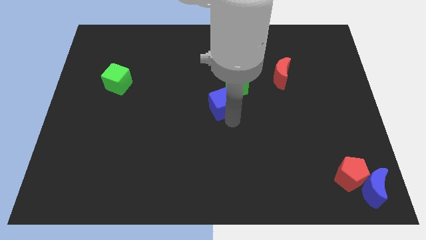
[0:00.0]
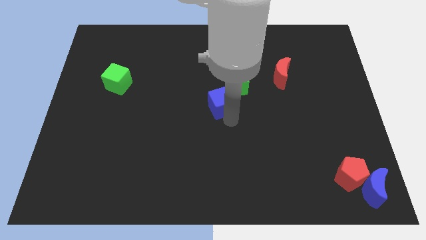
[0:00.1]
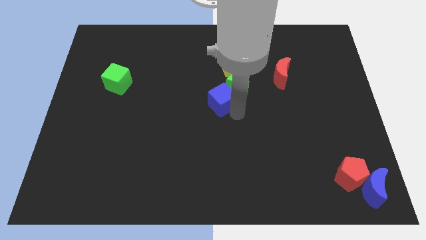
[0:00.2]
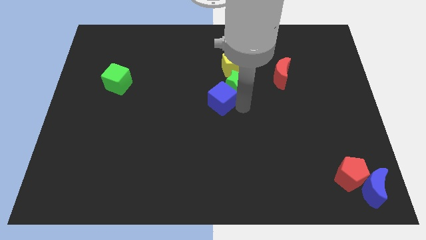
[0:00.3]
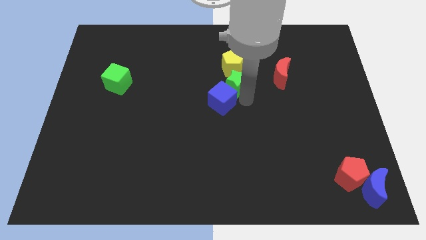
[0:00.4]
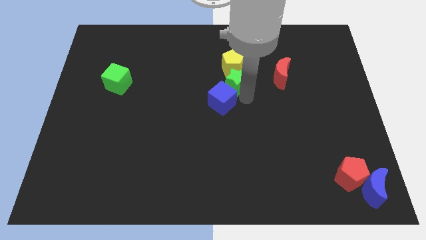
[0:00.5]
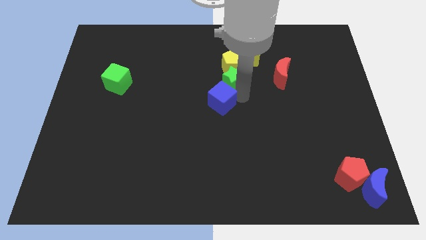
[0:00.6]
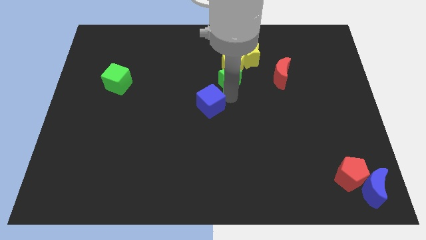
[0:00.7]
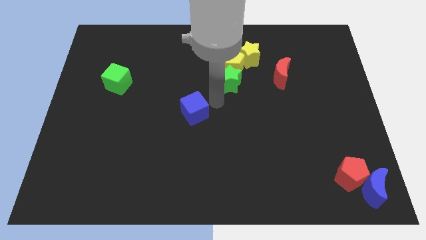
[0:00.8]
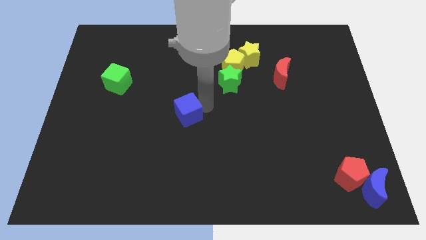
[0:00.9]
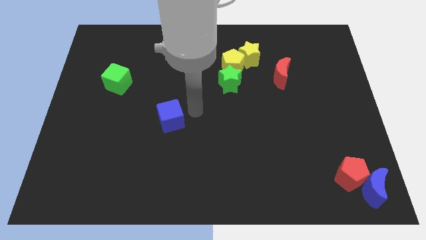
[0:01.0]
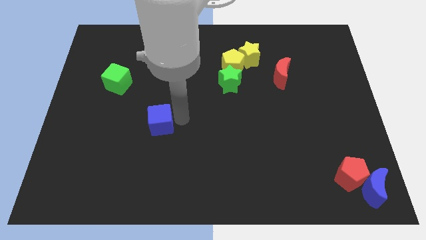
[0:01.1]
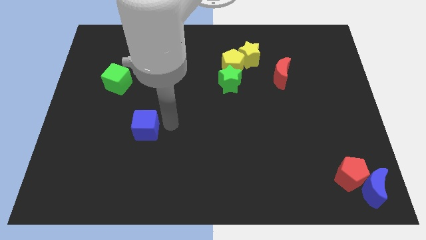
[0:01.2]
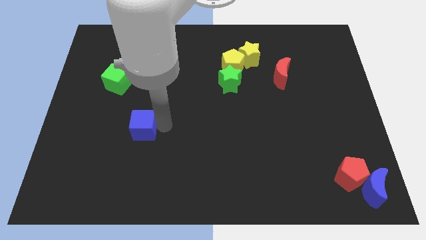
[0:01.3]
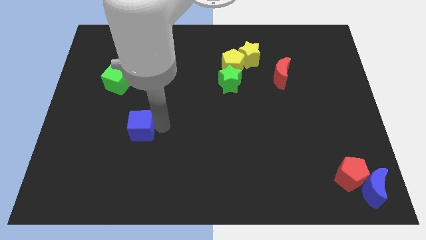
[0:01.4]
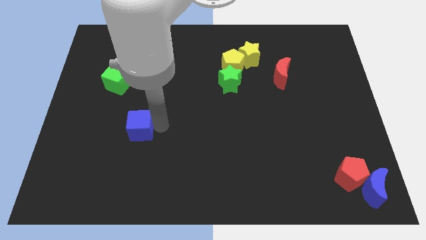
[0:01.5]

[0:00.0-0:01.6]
slide the blue cube to the left

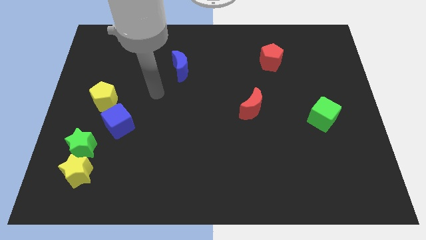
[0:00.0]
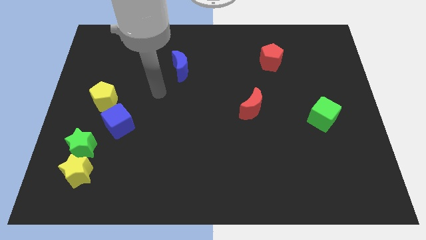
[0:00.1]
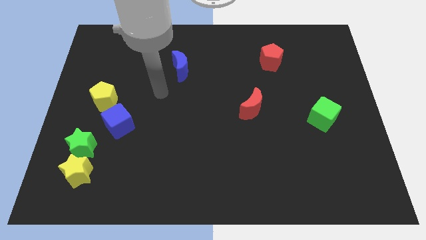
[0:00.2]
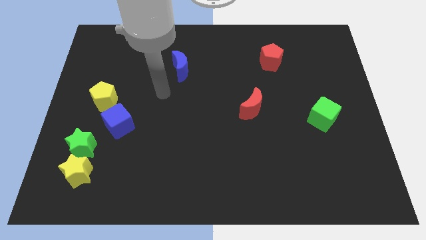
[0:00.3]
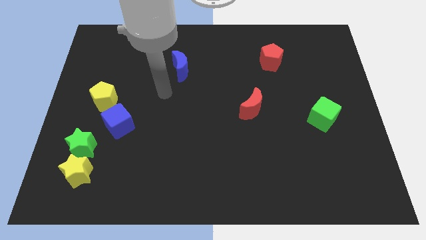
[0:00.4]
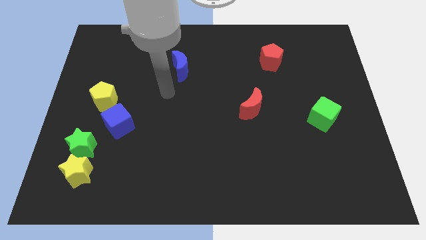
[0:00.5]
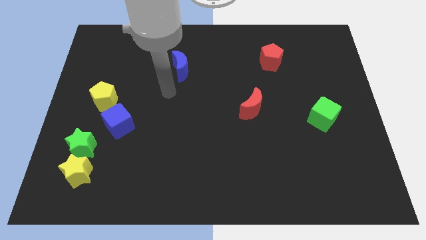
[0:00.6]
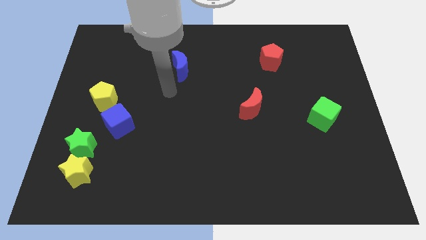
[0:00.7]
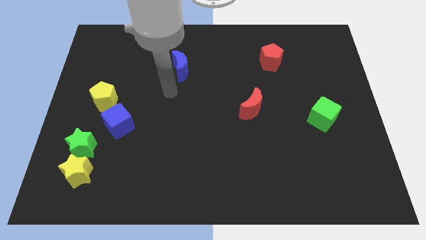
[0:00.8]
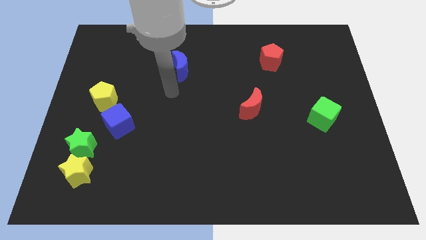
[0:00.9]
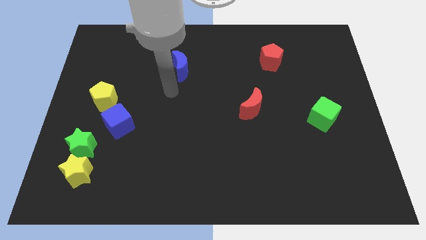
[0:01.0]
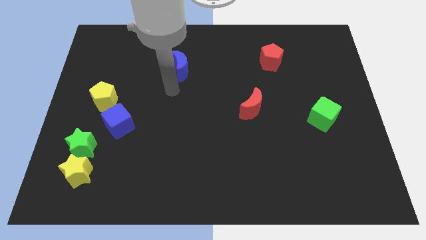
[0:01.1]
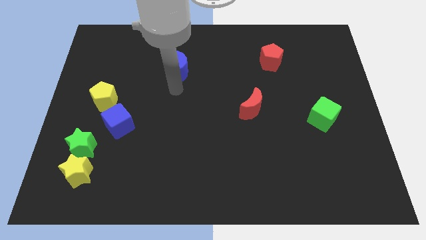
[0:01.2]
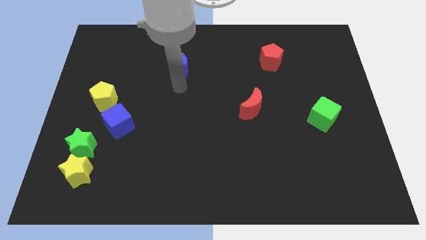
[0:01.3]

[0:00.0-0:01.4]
point your arm at the bottom of the blue crescent

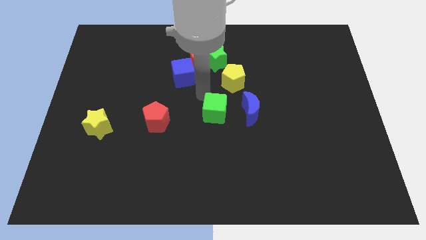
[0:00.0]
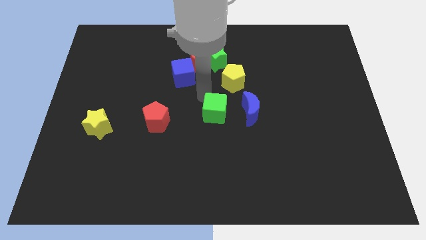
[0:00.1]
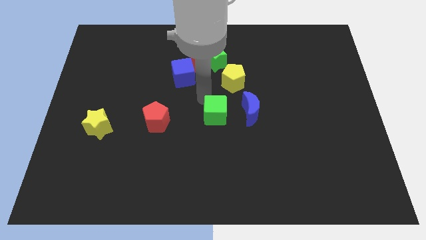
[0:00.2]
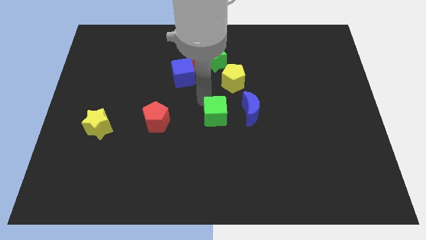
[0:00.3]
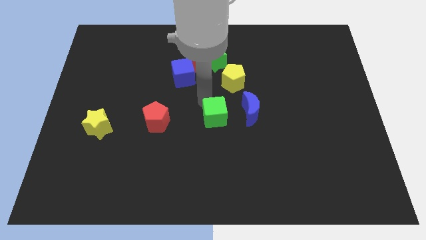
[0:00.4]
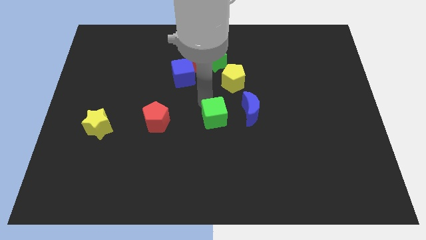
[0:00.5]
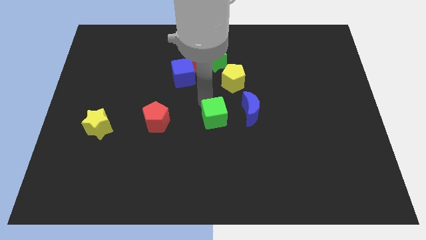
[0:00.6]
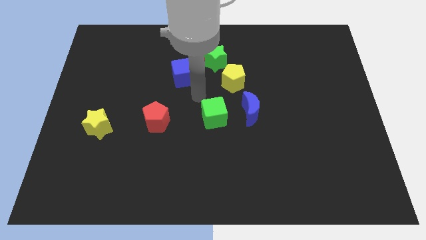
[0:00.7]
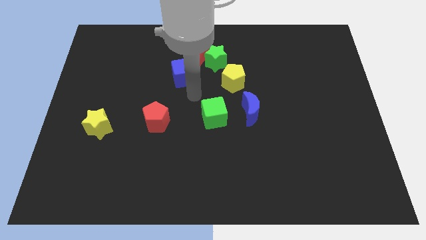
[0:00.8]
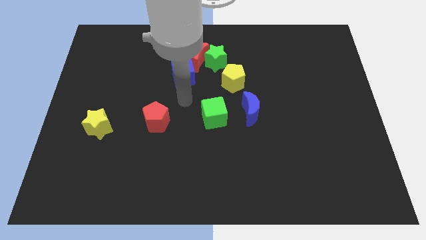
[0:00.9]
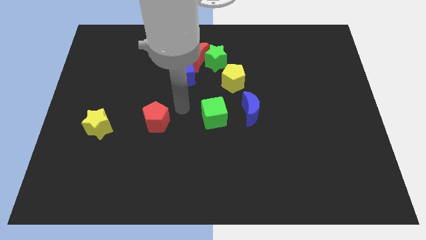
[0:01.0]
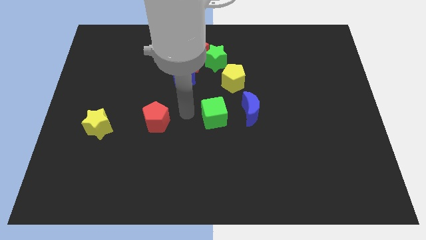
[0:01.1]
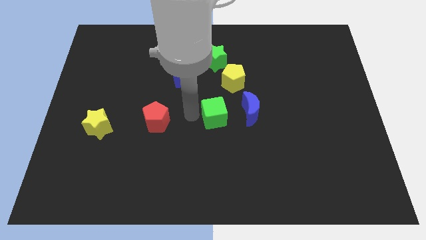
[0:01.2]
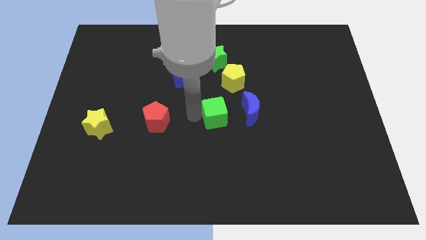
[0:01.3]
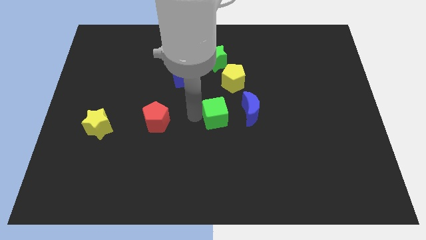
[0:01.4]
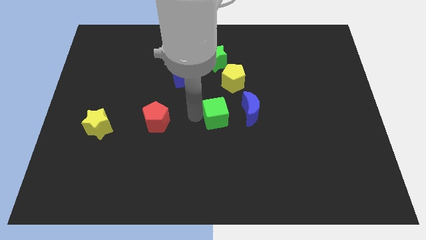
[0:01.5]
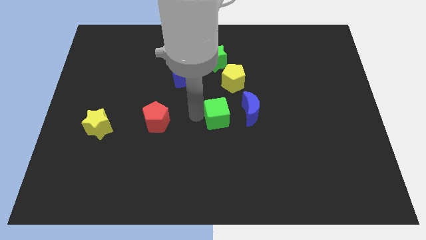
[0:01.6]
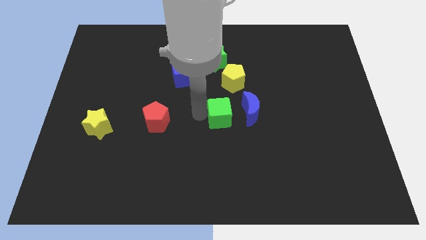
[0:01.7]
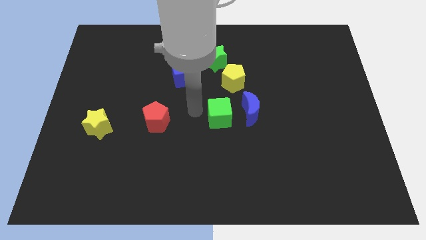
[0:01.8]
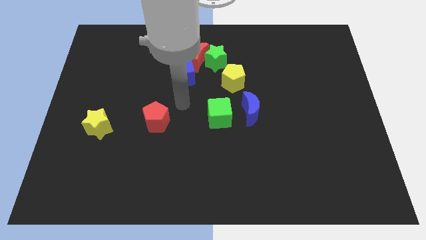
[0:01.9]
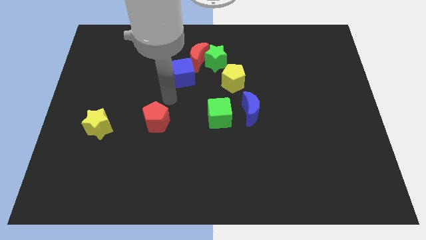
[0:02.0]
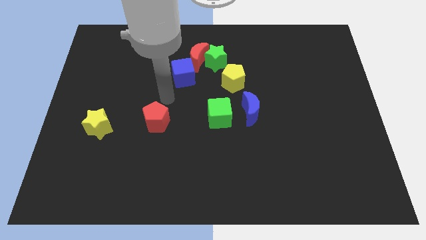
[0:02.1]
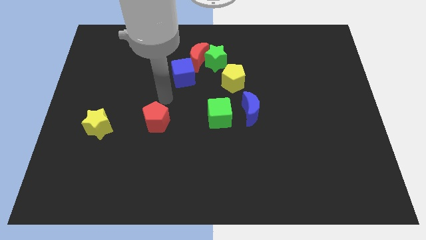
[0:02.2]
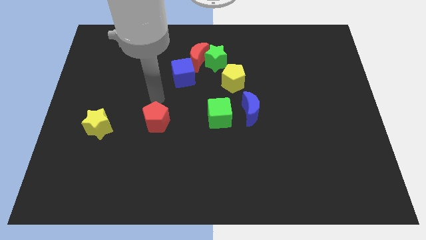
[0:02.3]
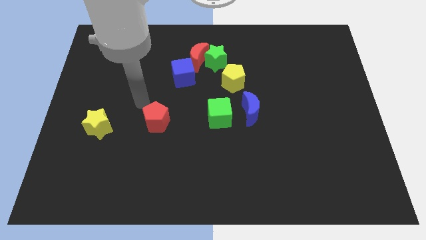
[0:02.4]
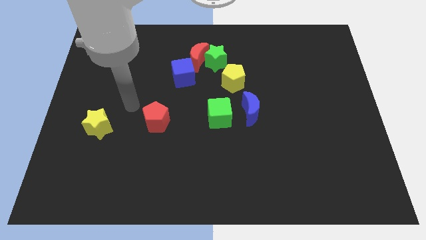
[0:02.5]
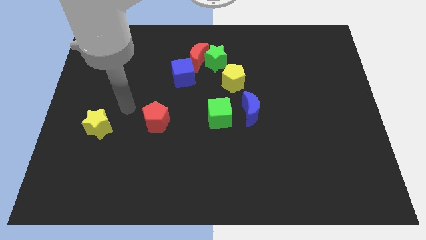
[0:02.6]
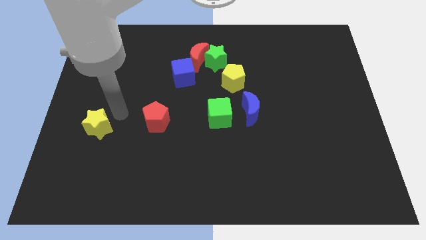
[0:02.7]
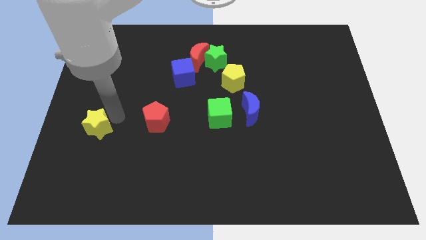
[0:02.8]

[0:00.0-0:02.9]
move green cube slightly towards blue crescent

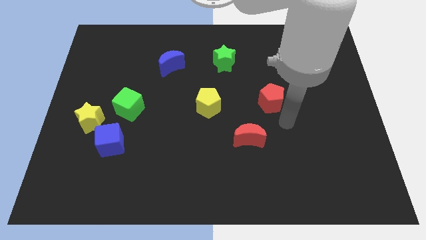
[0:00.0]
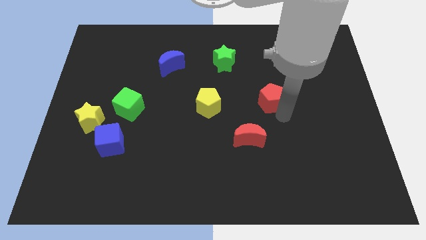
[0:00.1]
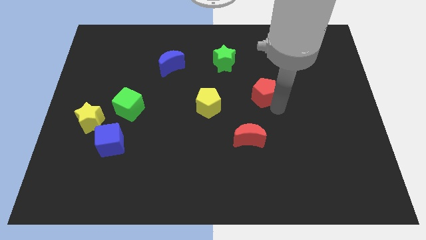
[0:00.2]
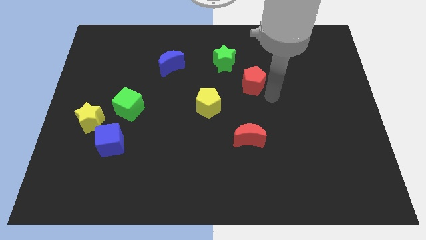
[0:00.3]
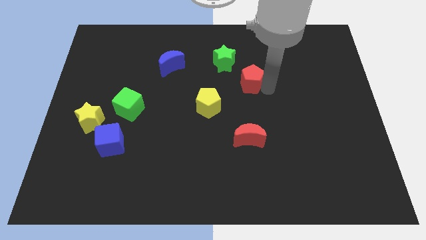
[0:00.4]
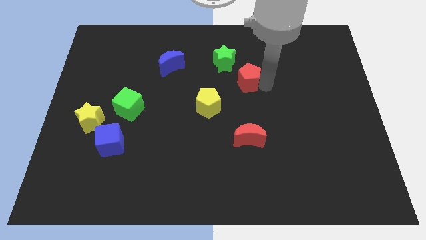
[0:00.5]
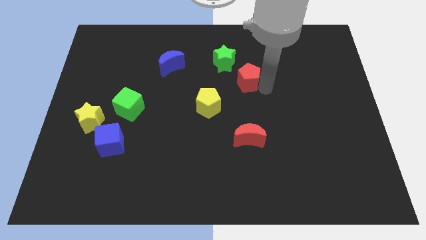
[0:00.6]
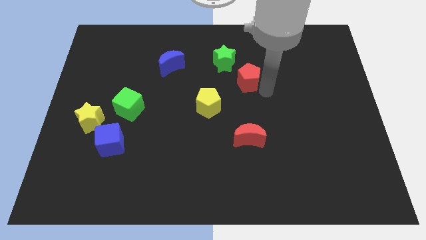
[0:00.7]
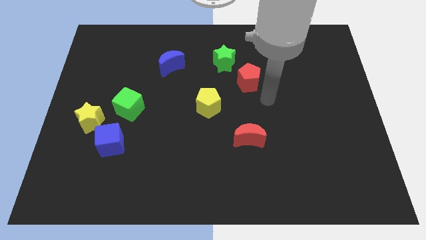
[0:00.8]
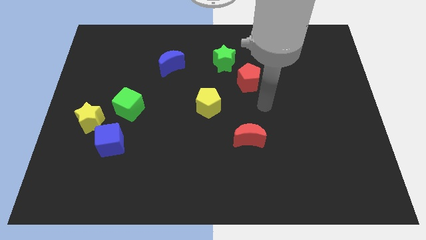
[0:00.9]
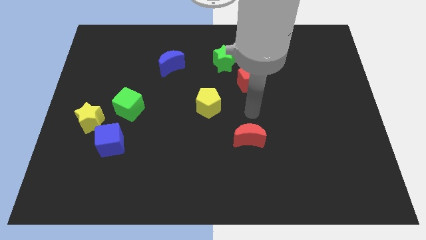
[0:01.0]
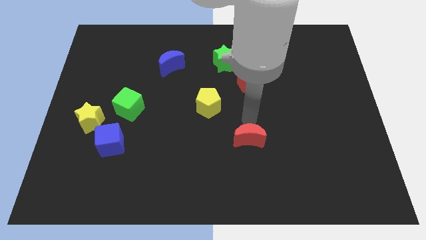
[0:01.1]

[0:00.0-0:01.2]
push the red pentagon to the top

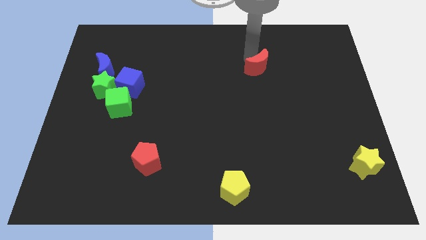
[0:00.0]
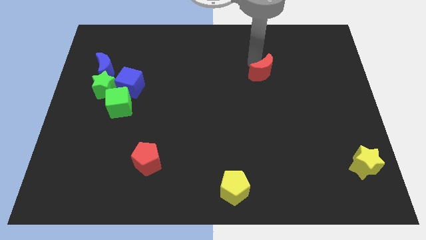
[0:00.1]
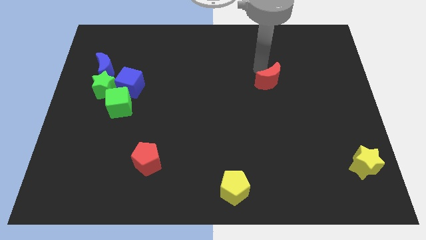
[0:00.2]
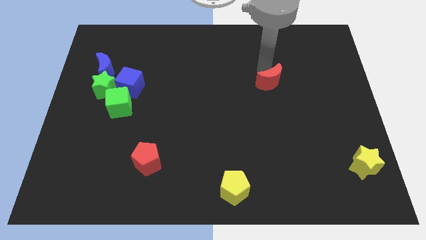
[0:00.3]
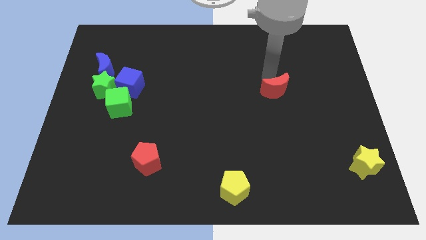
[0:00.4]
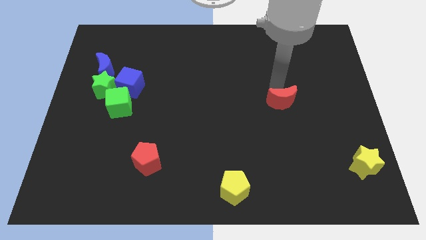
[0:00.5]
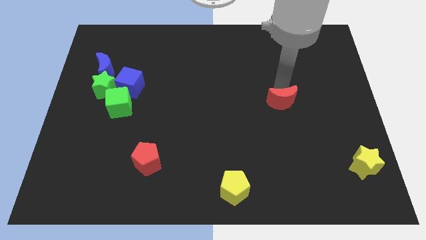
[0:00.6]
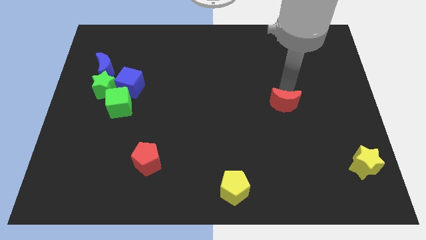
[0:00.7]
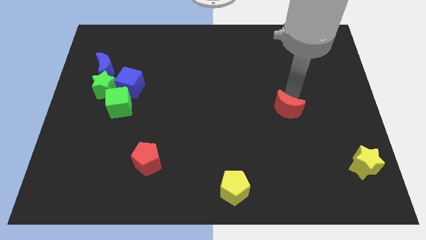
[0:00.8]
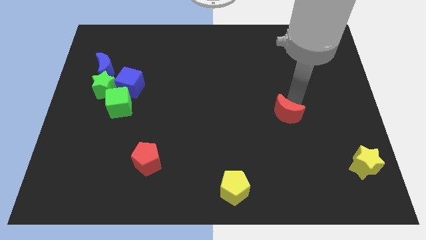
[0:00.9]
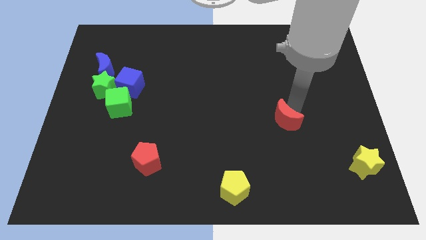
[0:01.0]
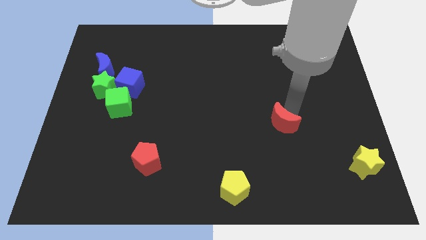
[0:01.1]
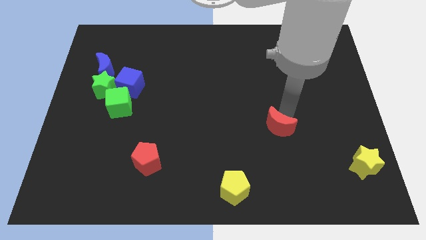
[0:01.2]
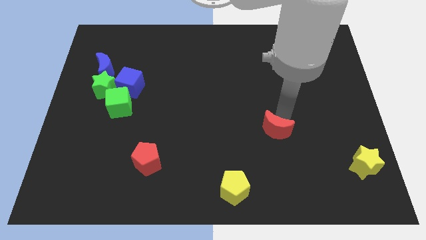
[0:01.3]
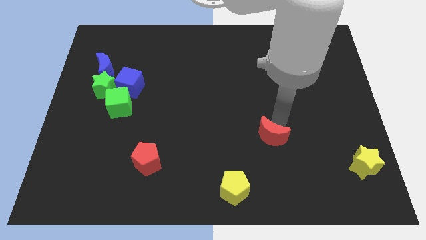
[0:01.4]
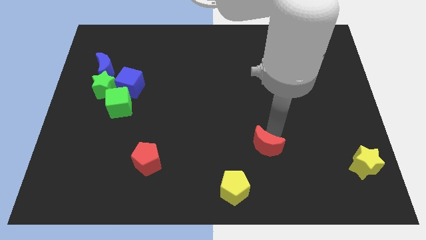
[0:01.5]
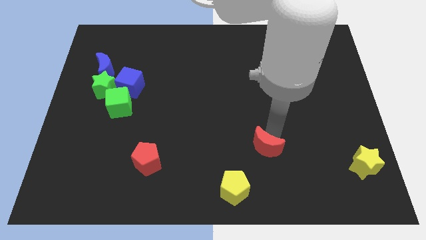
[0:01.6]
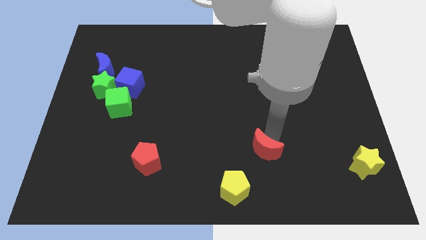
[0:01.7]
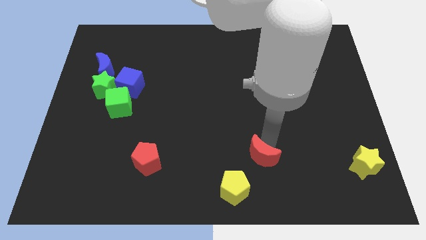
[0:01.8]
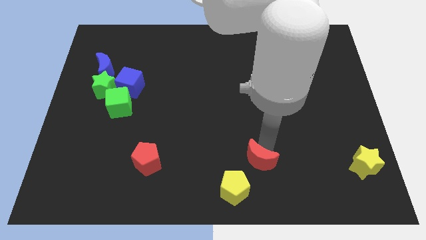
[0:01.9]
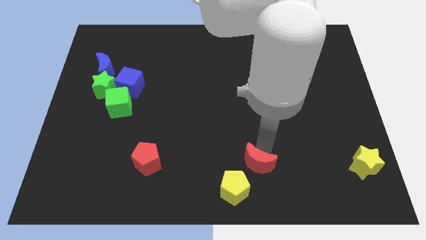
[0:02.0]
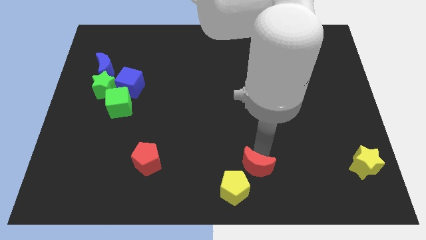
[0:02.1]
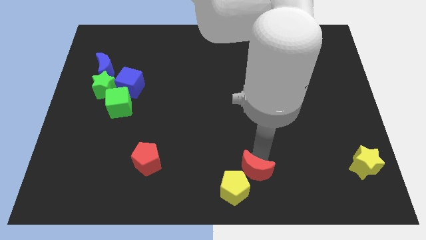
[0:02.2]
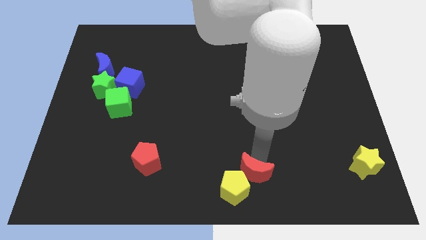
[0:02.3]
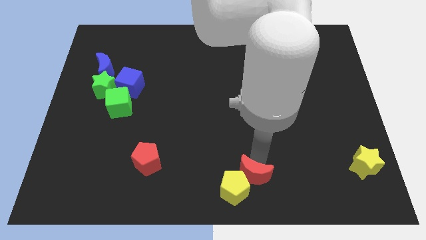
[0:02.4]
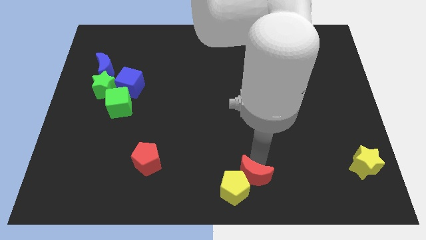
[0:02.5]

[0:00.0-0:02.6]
push the red crescent into the yellow pentagon
